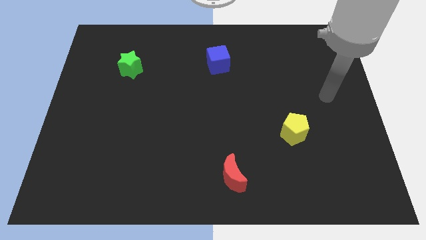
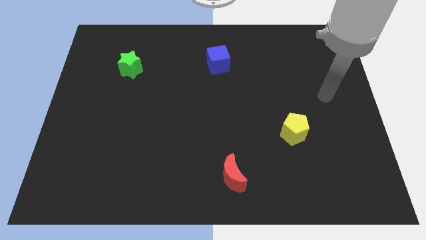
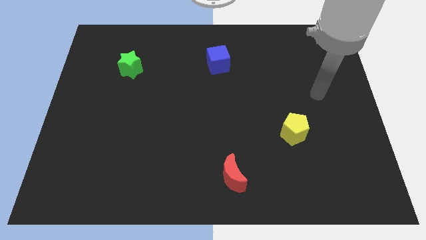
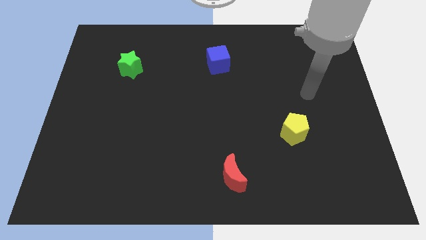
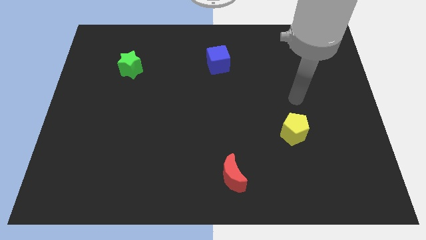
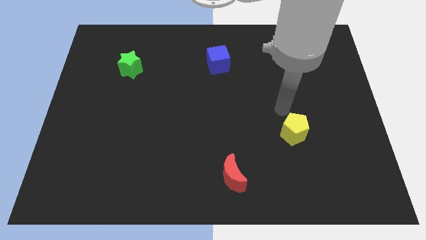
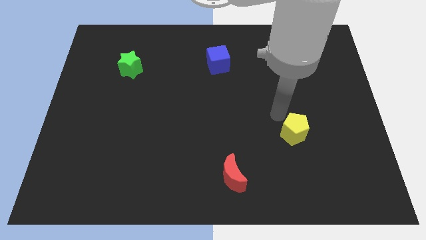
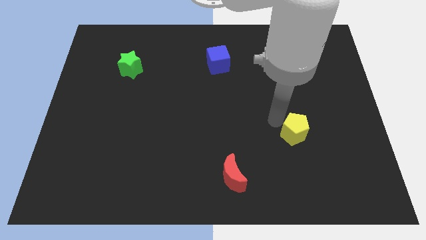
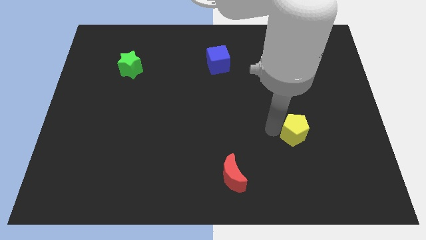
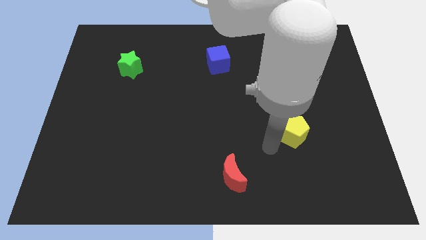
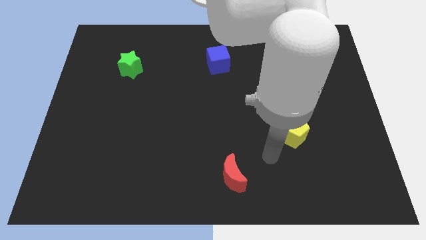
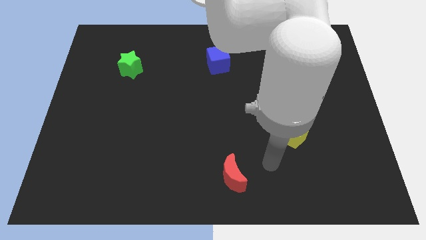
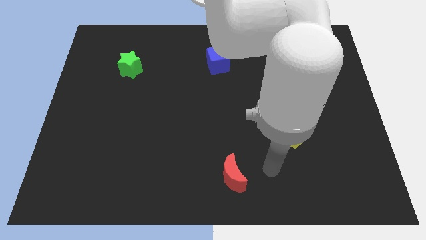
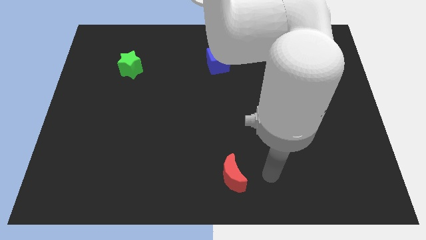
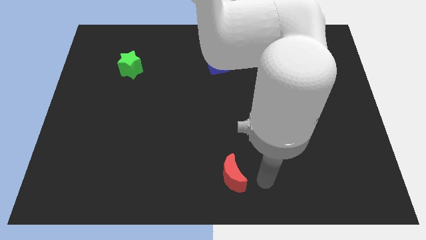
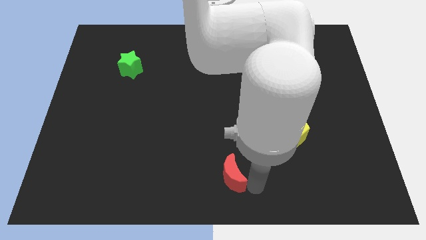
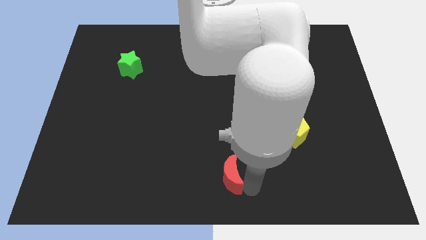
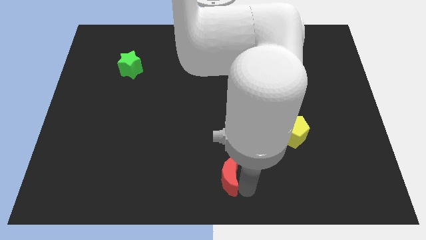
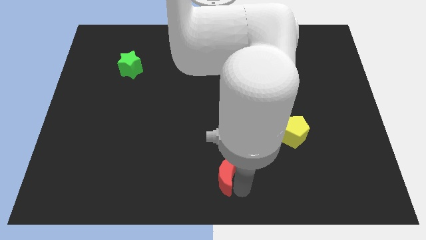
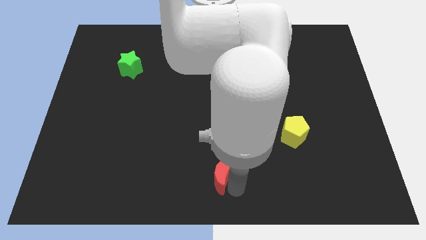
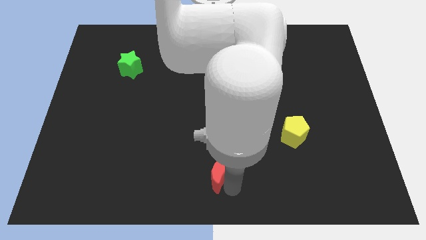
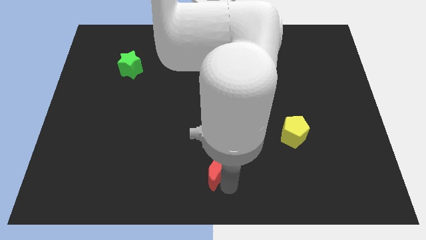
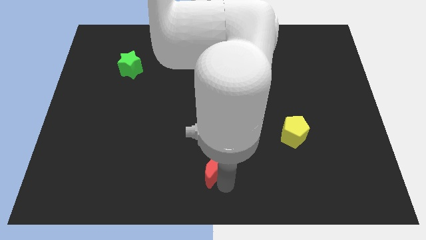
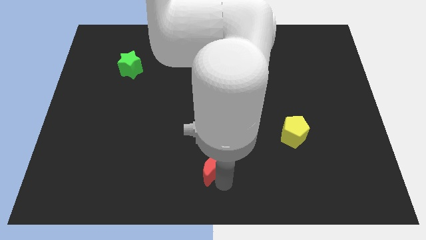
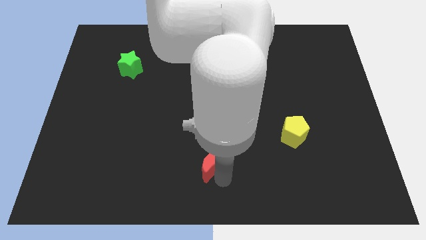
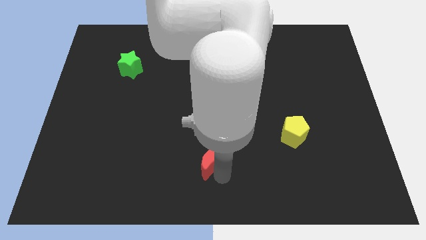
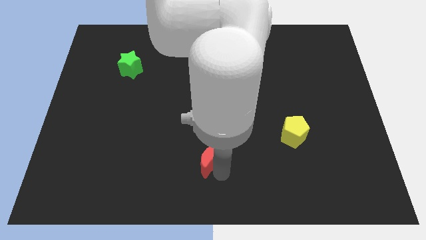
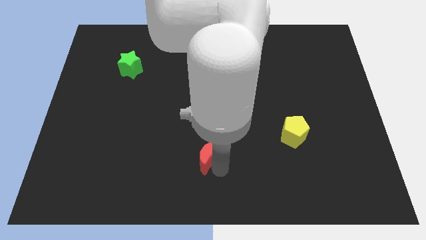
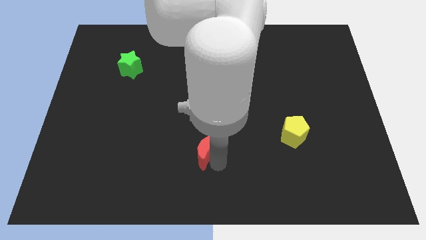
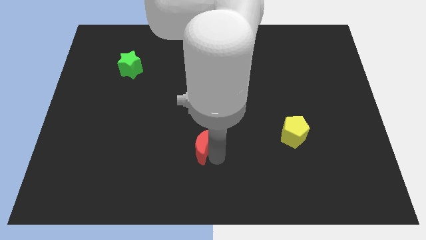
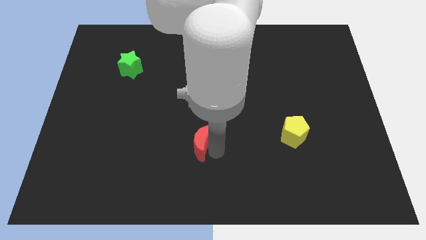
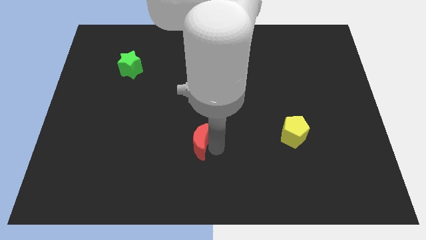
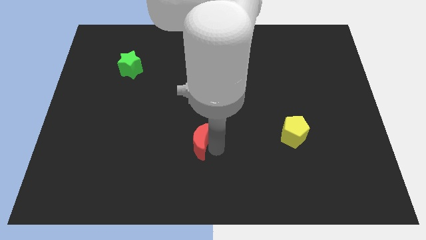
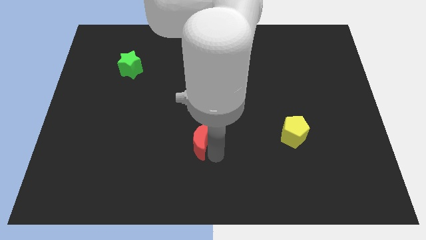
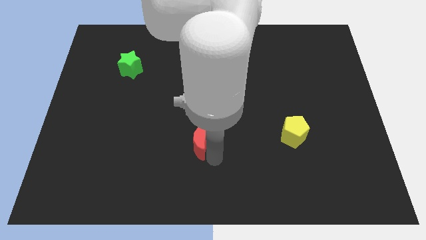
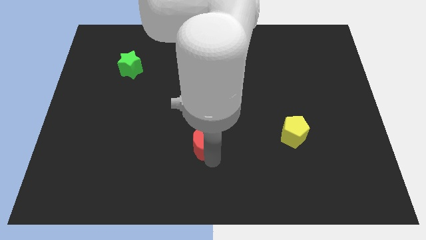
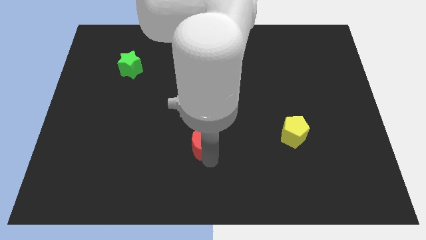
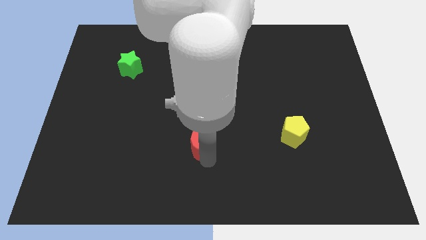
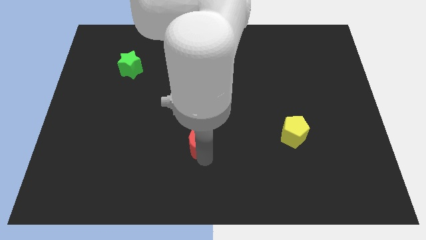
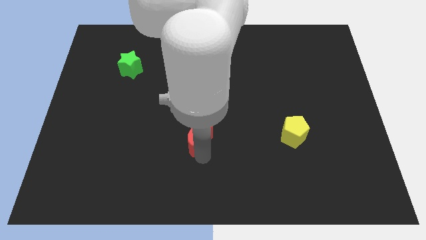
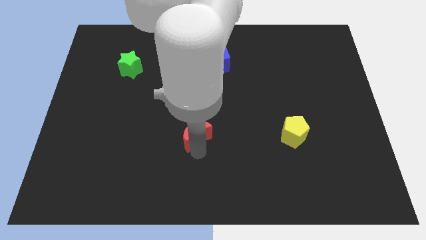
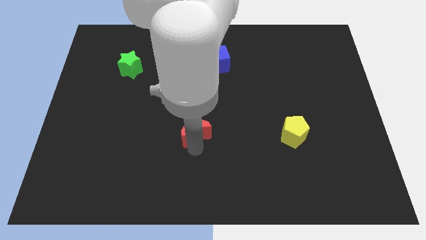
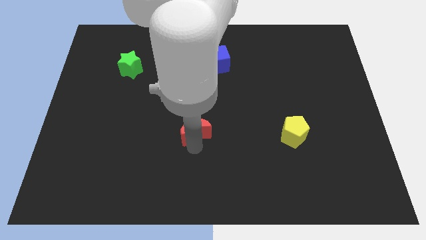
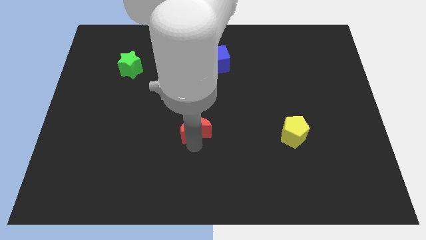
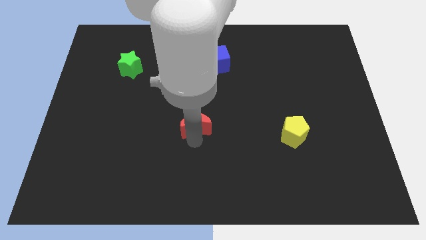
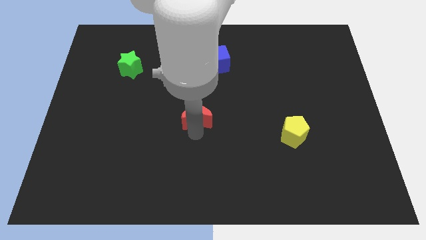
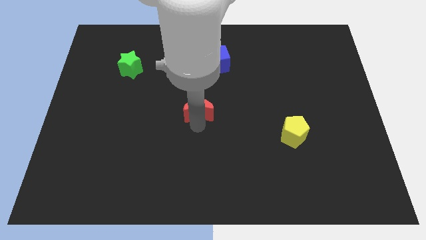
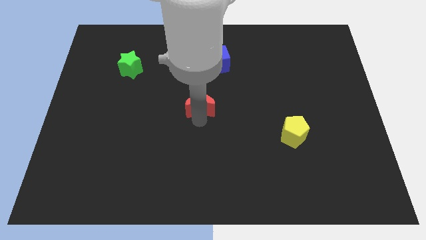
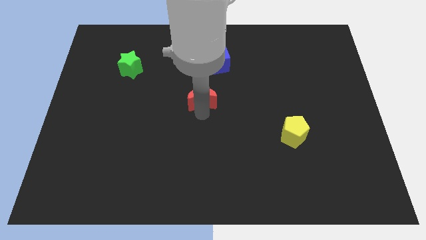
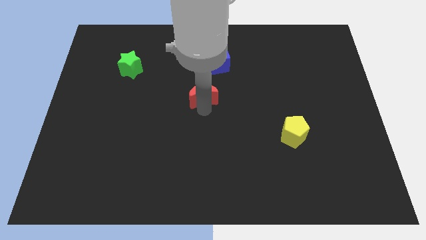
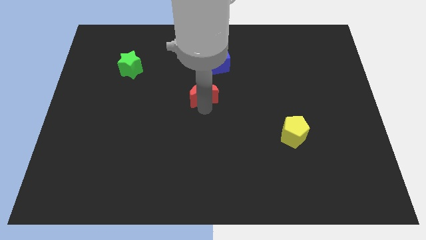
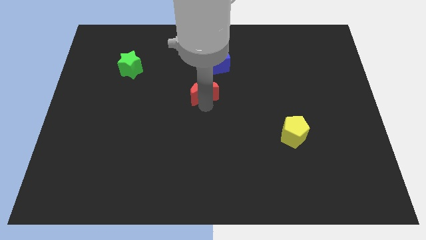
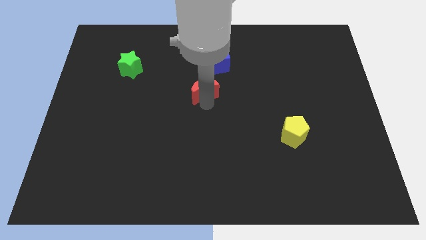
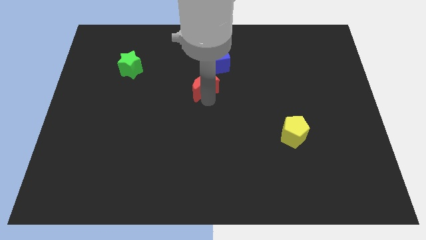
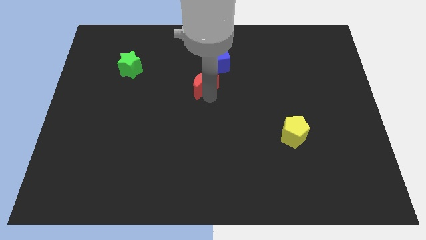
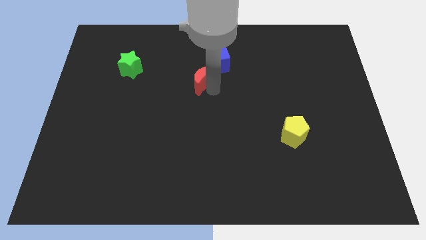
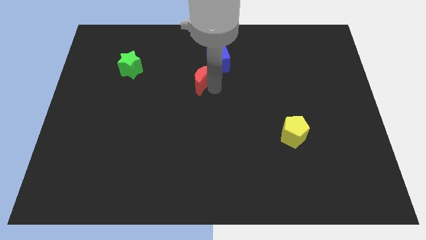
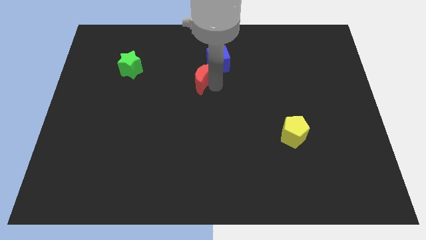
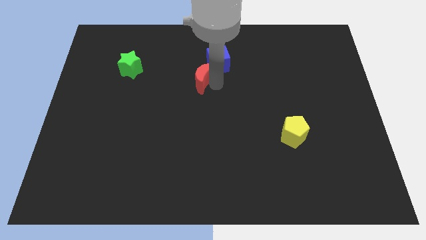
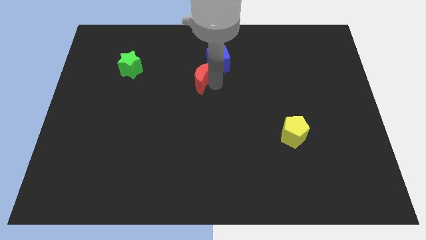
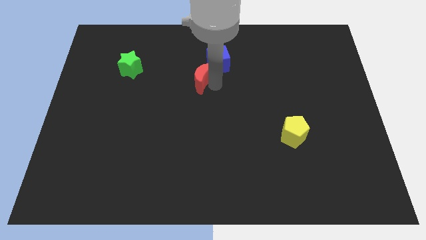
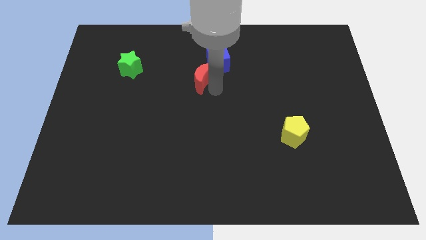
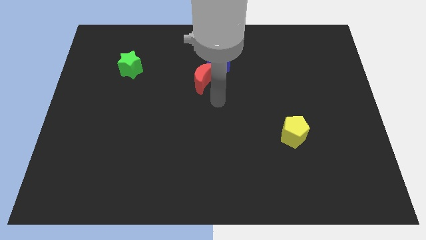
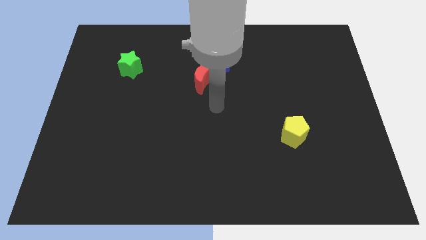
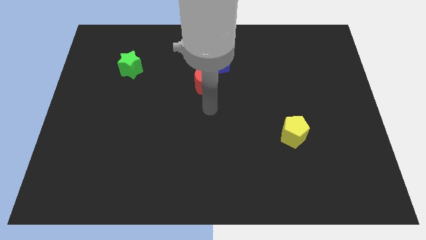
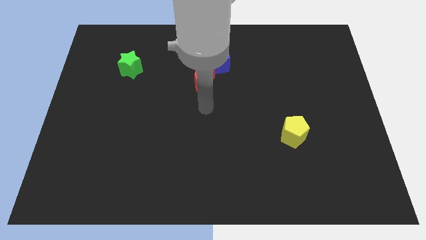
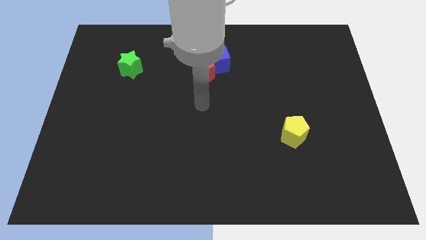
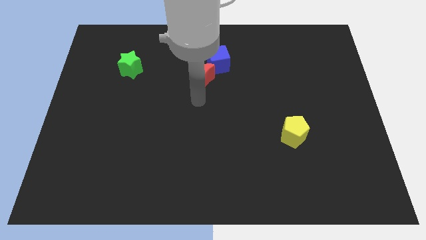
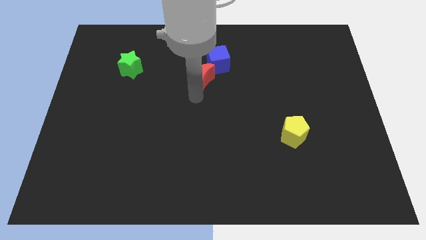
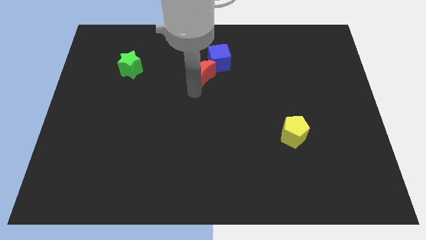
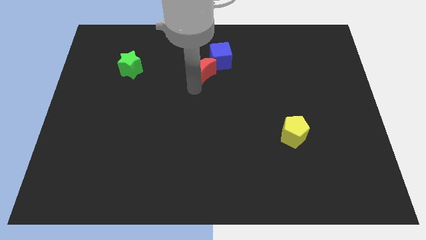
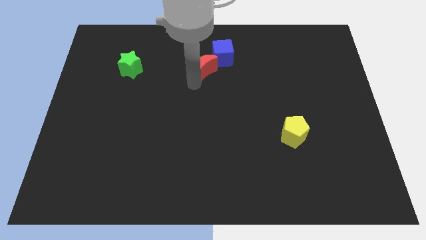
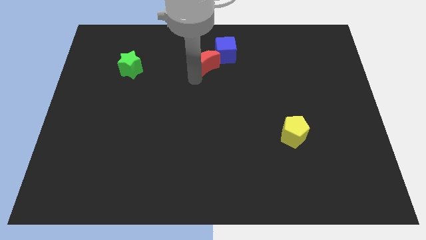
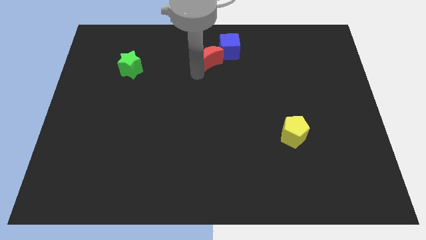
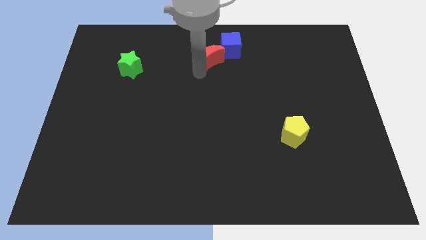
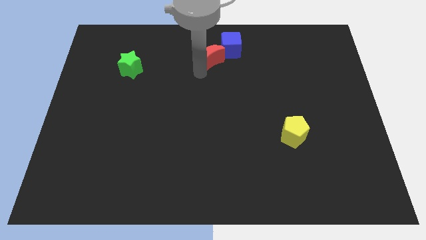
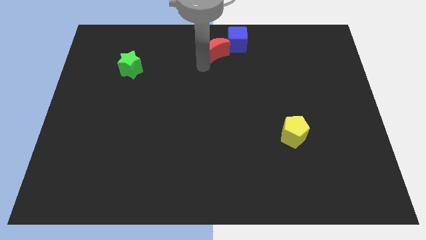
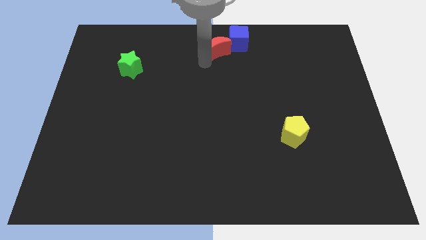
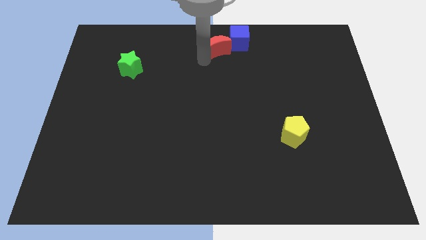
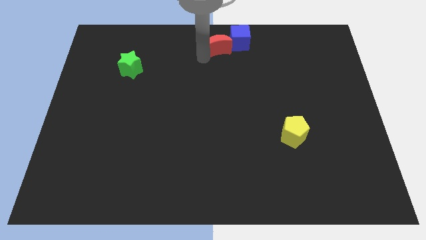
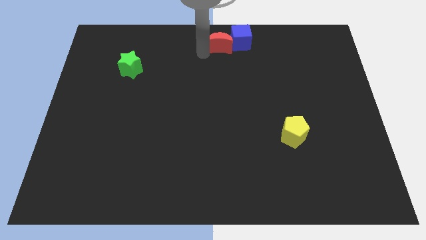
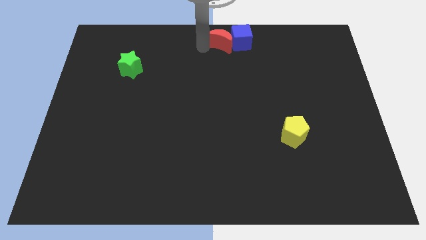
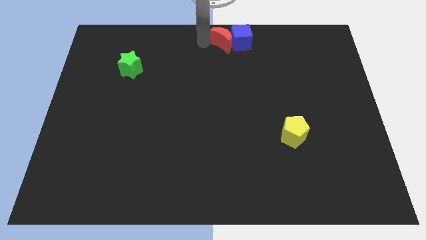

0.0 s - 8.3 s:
push the moon to the blue block
